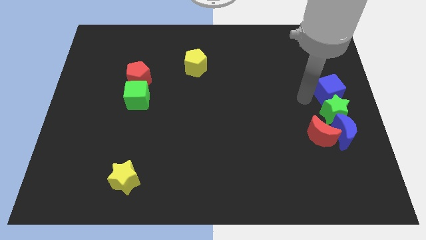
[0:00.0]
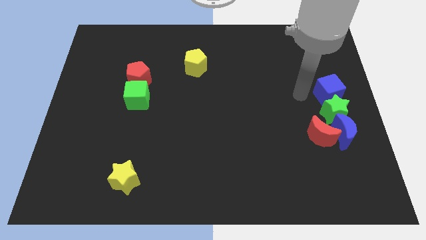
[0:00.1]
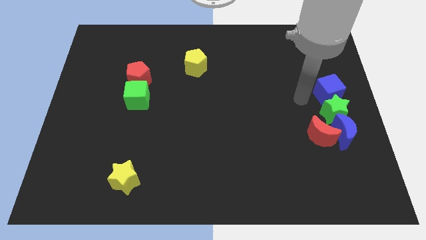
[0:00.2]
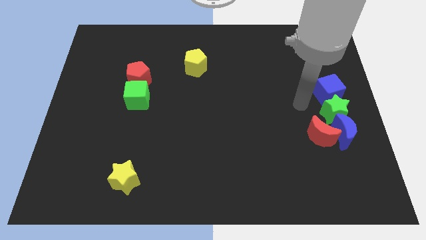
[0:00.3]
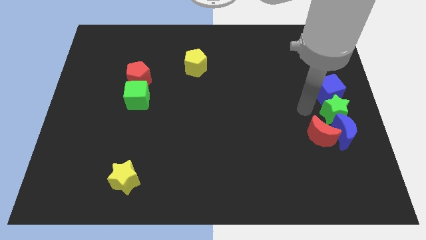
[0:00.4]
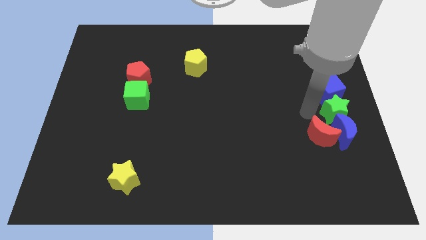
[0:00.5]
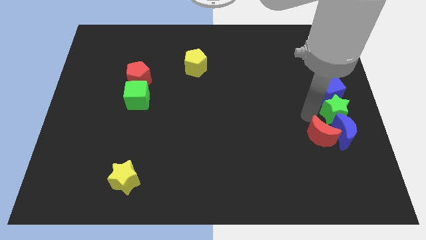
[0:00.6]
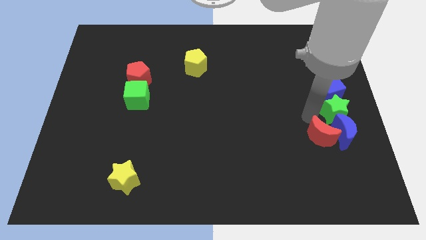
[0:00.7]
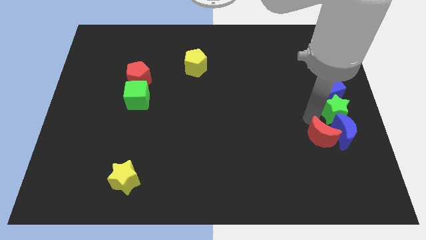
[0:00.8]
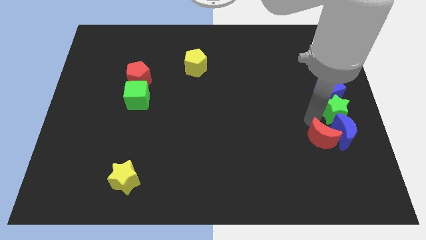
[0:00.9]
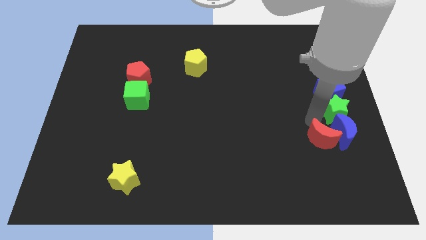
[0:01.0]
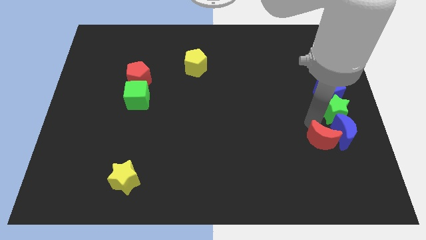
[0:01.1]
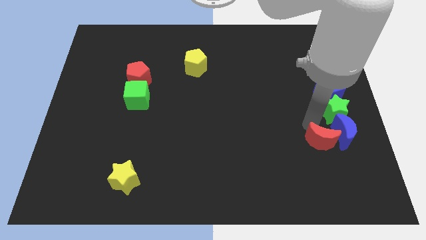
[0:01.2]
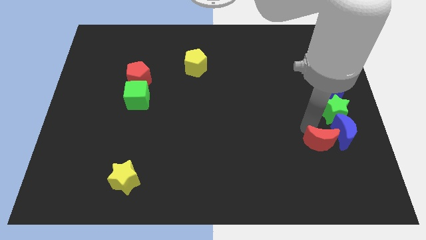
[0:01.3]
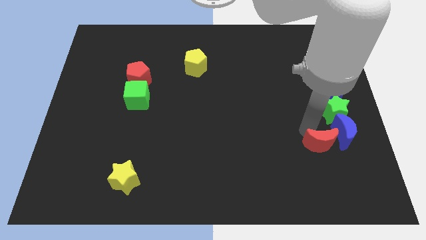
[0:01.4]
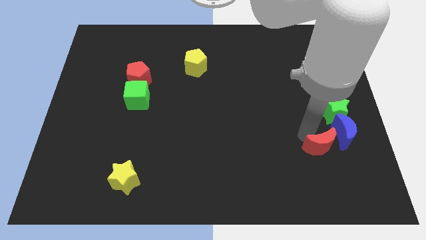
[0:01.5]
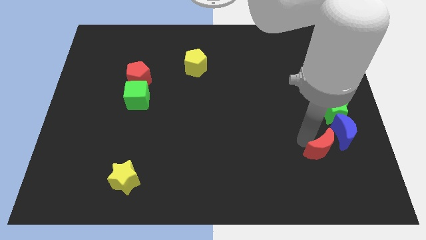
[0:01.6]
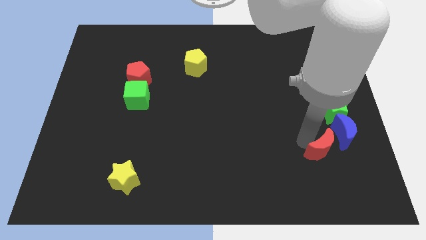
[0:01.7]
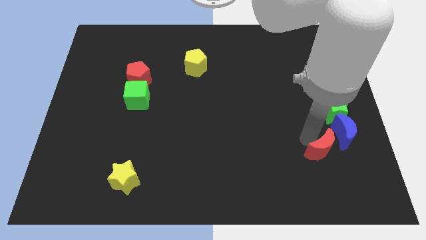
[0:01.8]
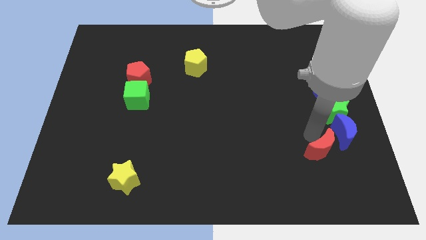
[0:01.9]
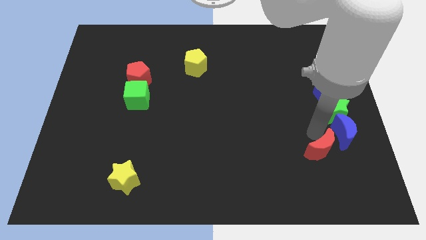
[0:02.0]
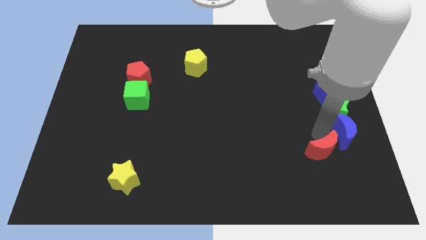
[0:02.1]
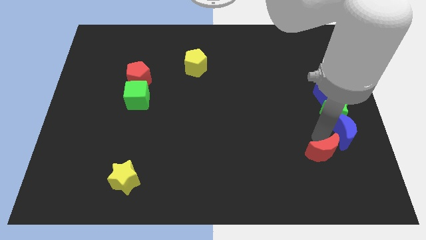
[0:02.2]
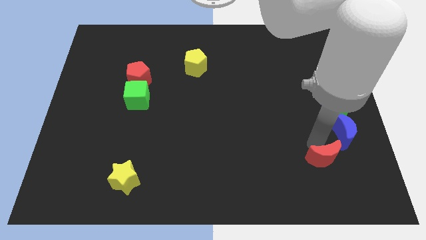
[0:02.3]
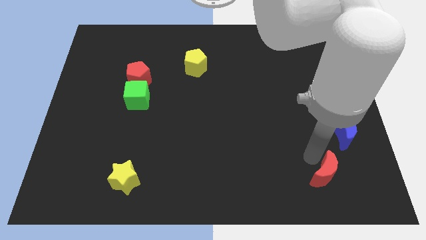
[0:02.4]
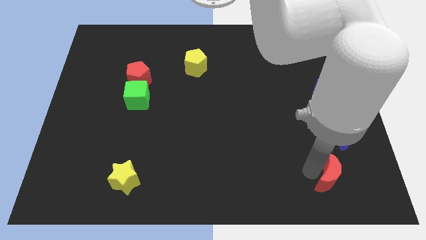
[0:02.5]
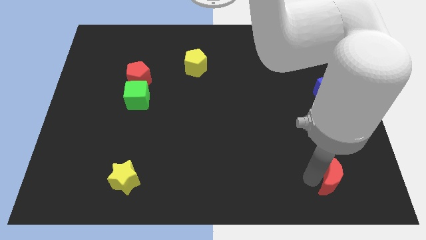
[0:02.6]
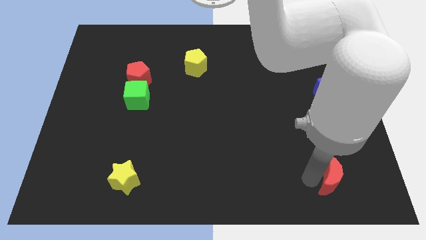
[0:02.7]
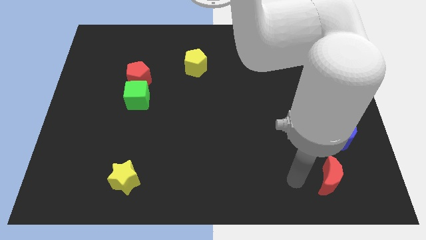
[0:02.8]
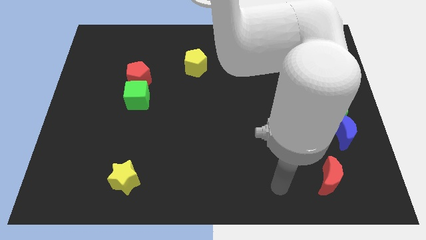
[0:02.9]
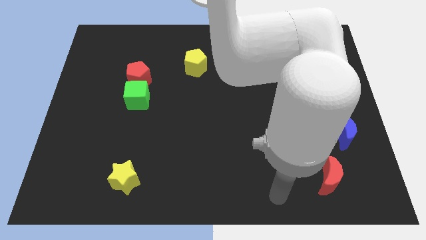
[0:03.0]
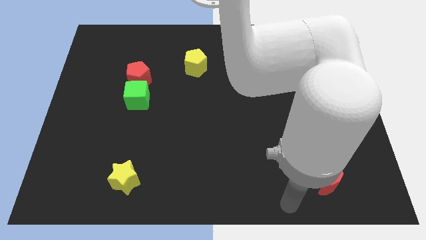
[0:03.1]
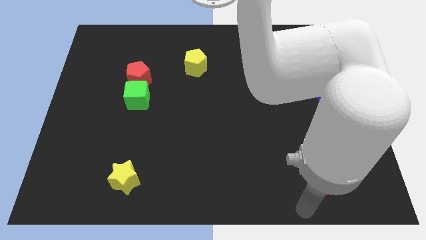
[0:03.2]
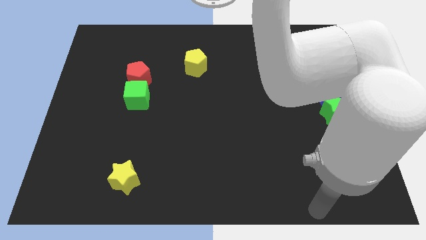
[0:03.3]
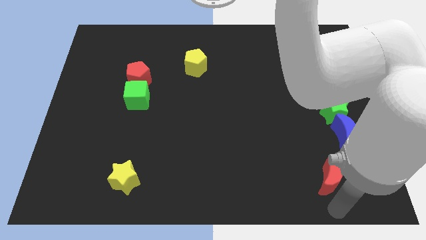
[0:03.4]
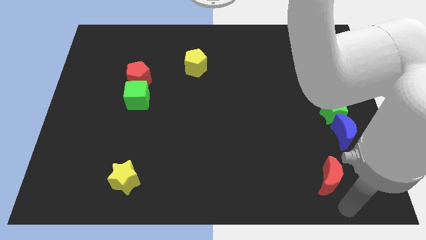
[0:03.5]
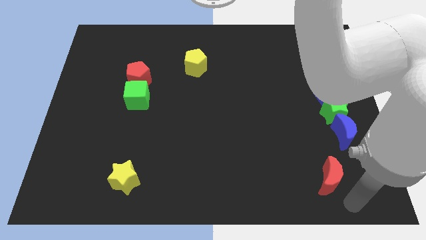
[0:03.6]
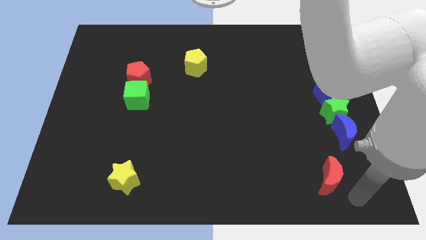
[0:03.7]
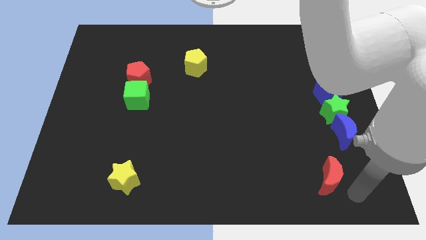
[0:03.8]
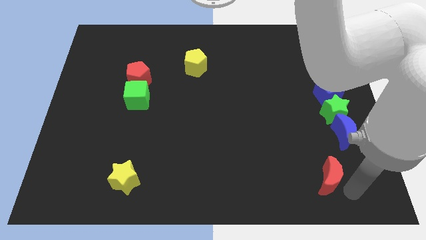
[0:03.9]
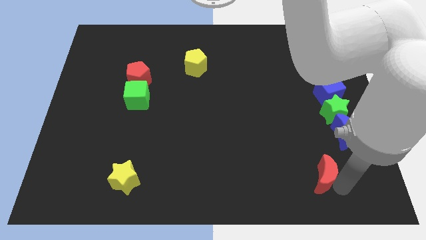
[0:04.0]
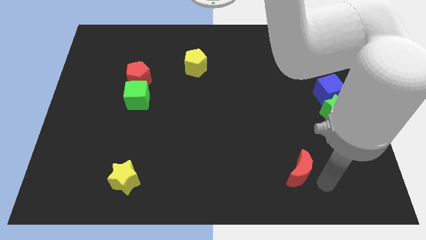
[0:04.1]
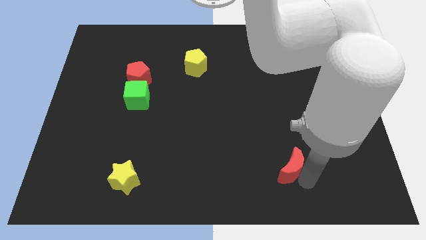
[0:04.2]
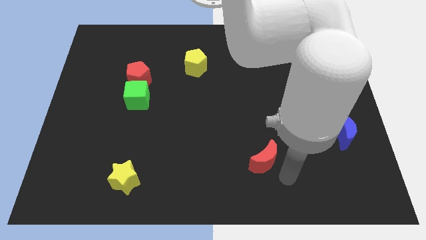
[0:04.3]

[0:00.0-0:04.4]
push the red crescent to the left of the board

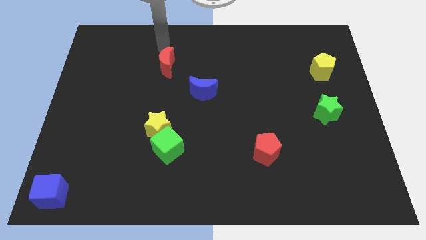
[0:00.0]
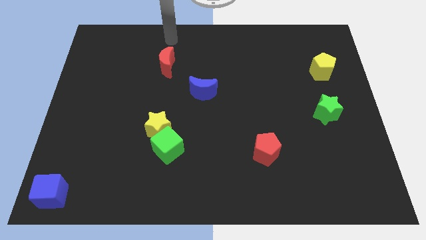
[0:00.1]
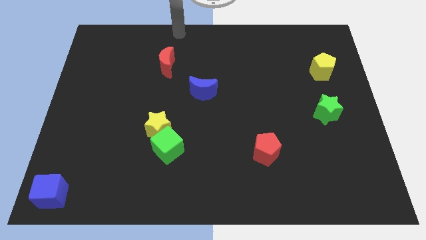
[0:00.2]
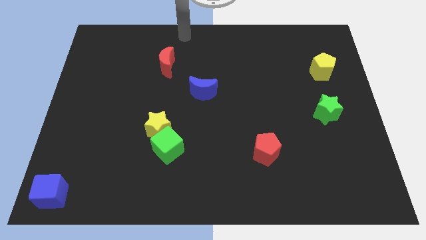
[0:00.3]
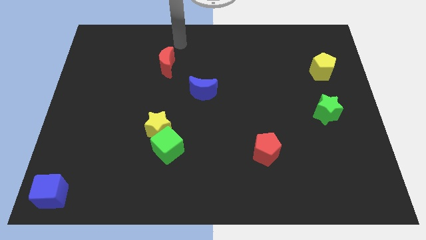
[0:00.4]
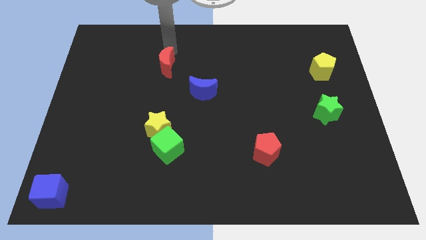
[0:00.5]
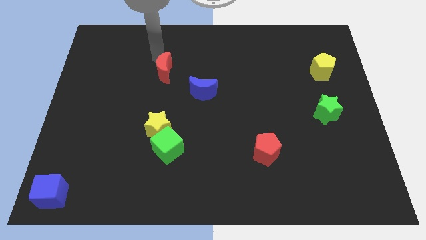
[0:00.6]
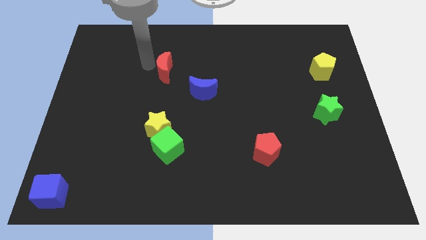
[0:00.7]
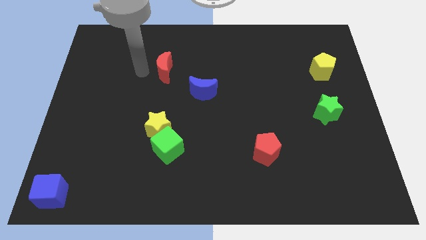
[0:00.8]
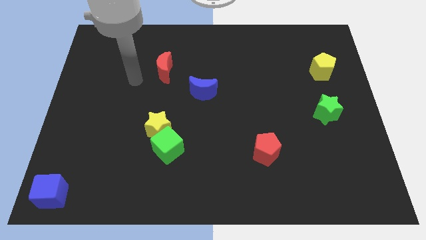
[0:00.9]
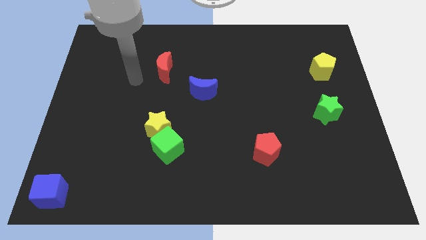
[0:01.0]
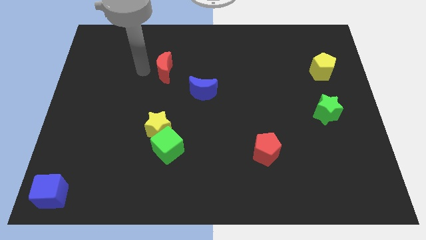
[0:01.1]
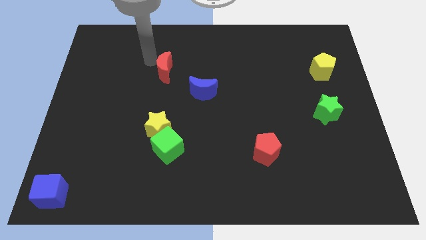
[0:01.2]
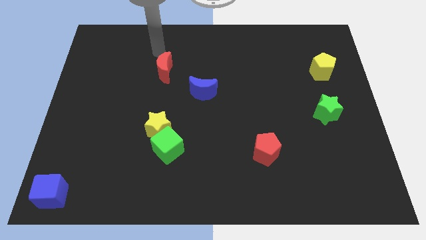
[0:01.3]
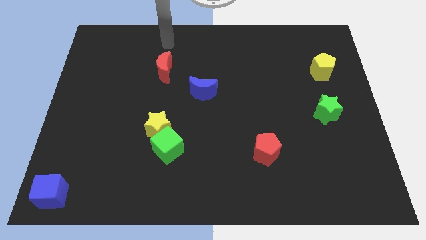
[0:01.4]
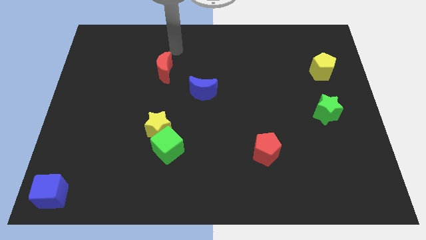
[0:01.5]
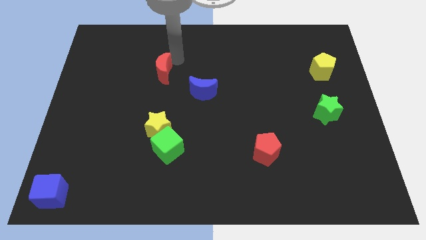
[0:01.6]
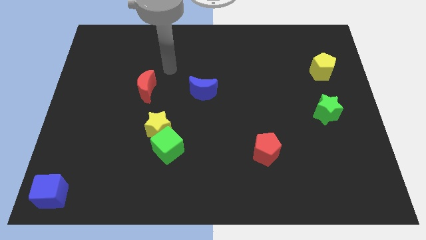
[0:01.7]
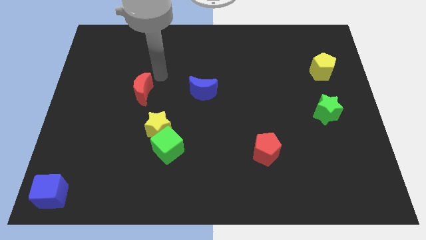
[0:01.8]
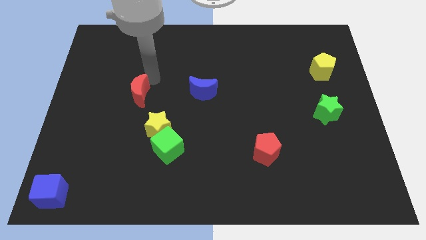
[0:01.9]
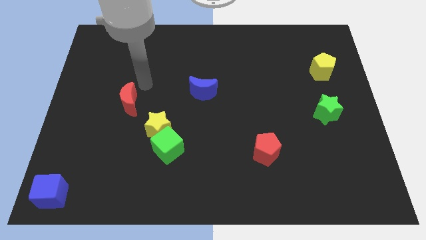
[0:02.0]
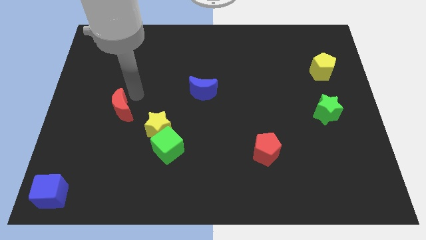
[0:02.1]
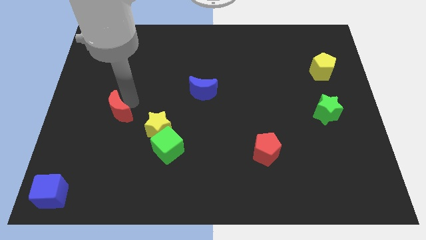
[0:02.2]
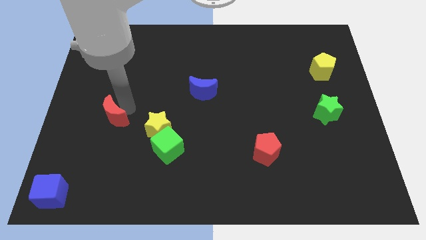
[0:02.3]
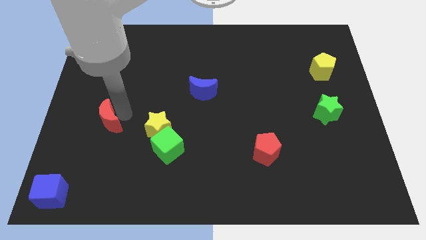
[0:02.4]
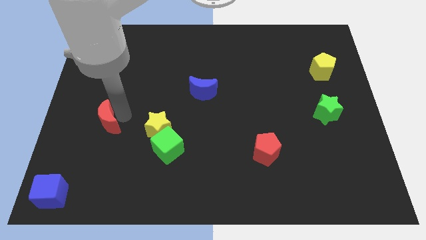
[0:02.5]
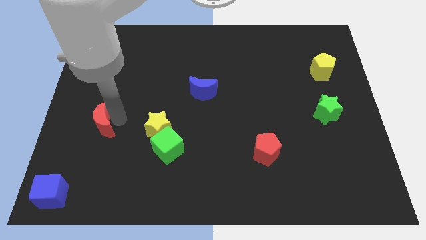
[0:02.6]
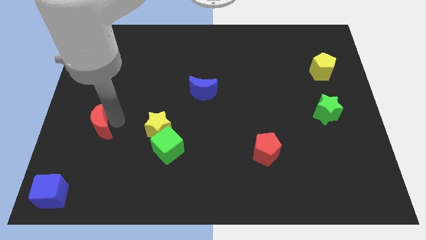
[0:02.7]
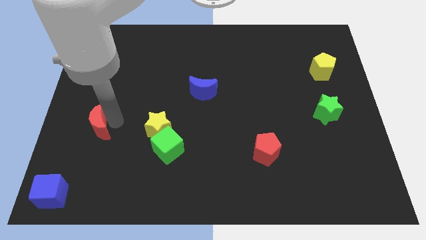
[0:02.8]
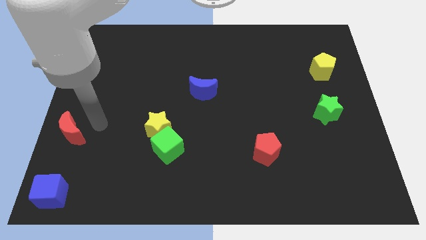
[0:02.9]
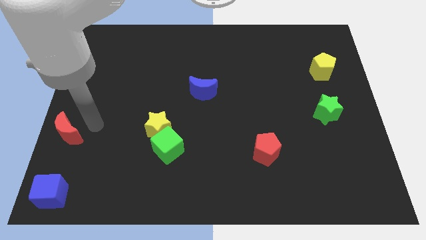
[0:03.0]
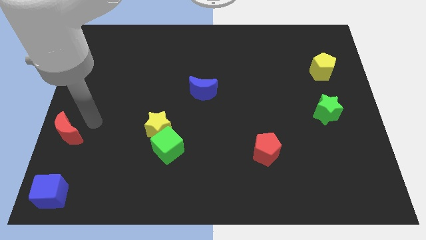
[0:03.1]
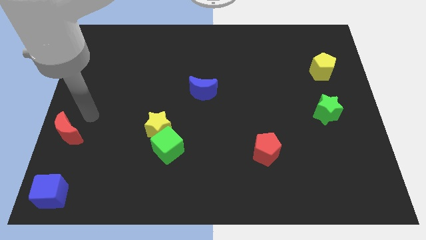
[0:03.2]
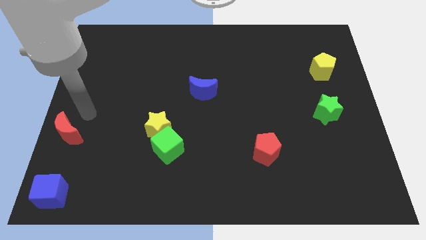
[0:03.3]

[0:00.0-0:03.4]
place the red moon above the blue cube

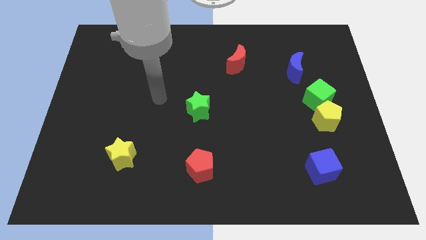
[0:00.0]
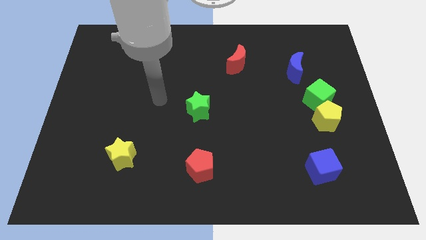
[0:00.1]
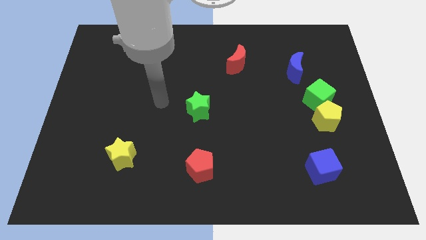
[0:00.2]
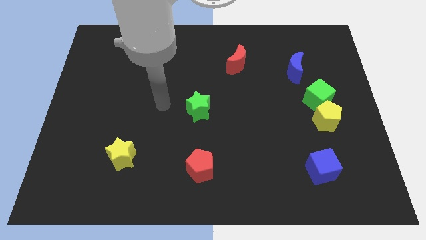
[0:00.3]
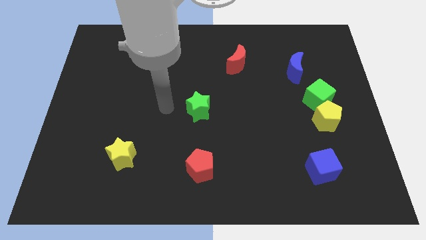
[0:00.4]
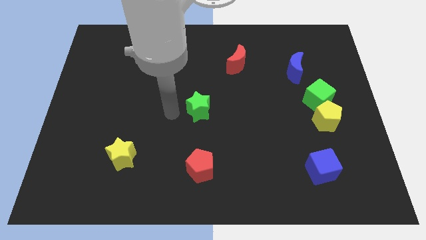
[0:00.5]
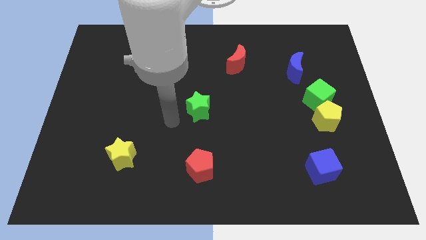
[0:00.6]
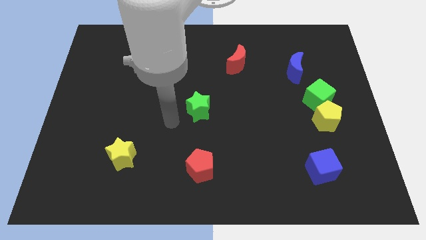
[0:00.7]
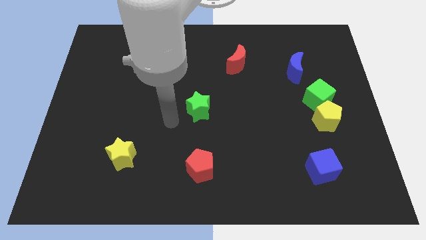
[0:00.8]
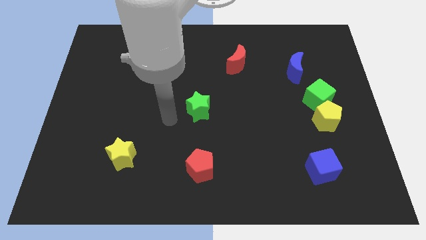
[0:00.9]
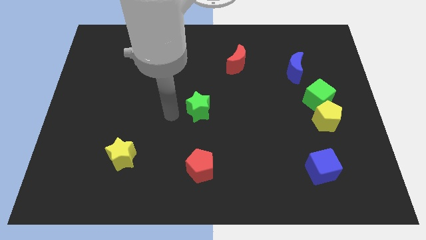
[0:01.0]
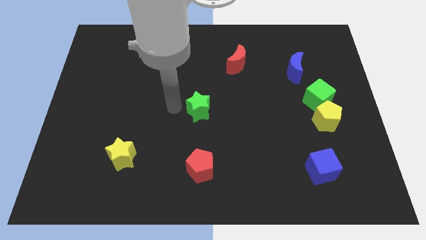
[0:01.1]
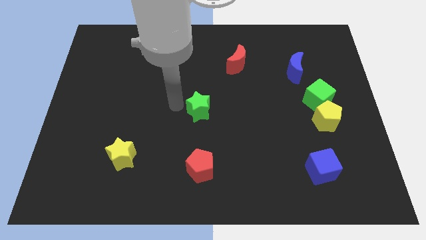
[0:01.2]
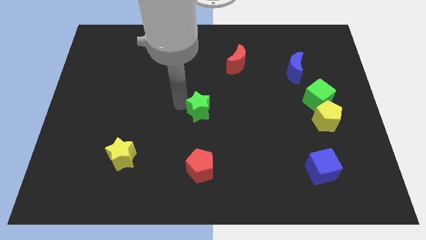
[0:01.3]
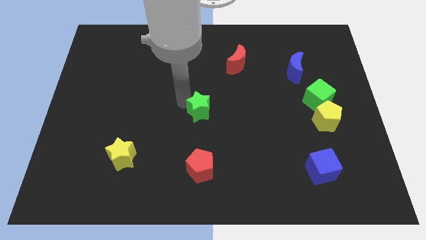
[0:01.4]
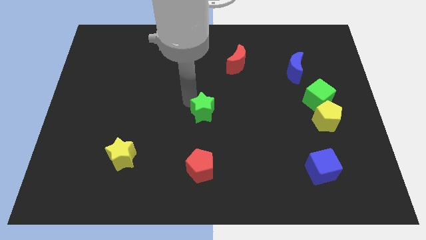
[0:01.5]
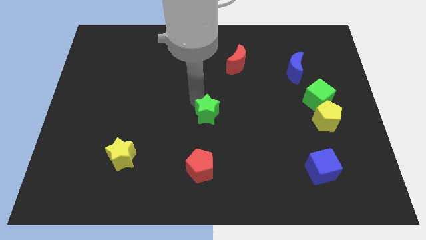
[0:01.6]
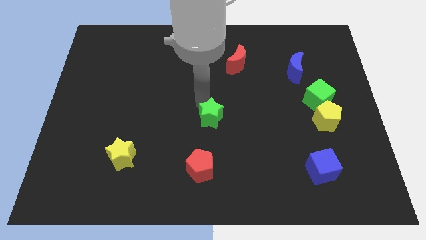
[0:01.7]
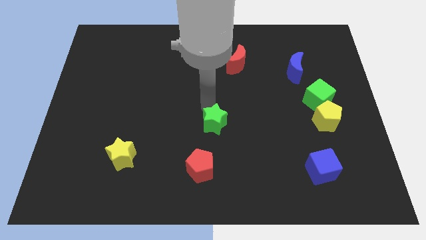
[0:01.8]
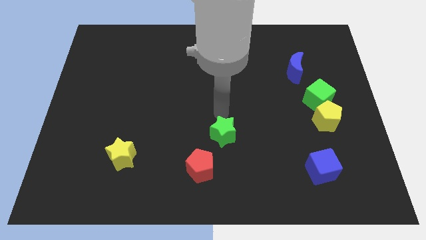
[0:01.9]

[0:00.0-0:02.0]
move the green star diagonal to the top of the red pentagon
